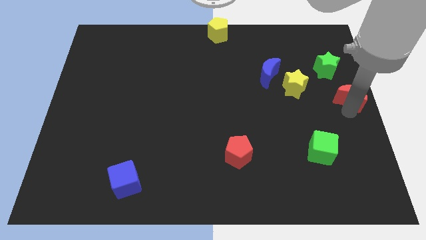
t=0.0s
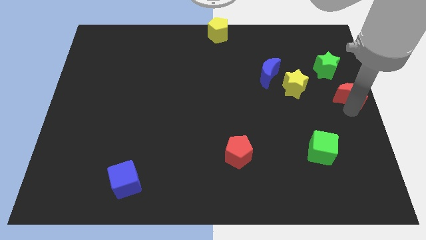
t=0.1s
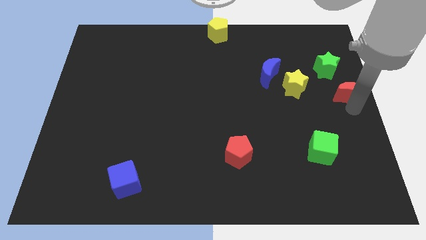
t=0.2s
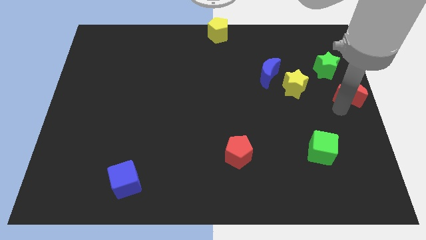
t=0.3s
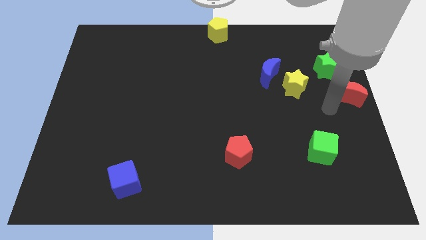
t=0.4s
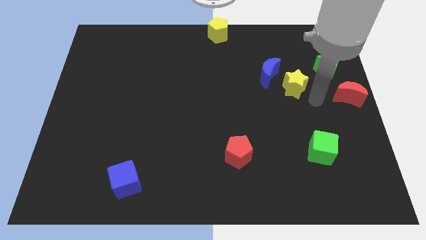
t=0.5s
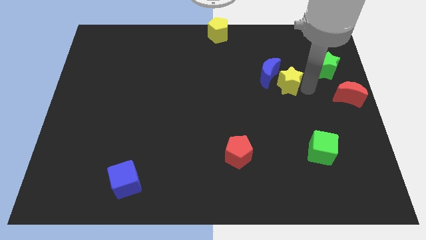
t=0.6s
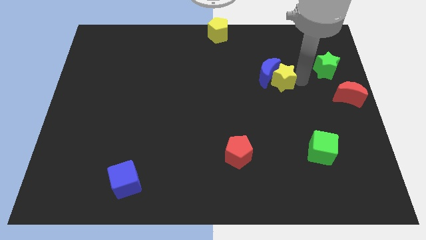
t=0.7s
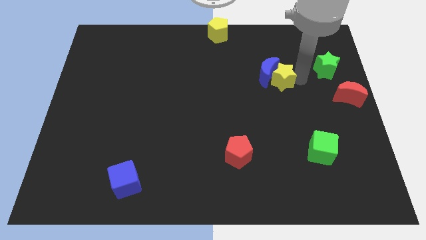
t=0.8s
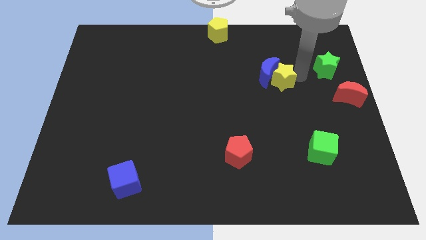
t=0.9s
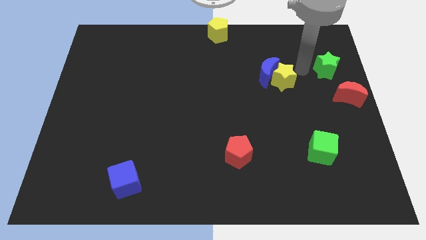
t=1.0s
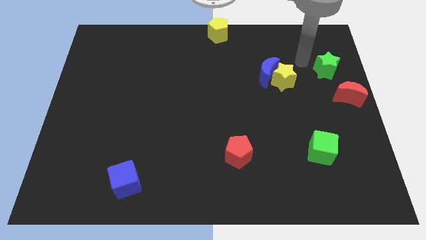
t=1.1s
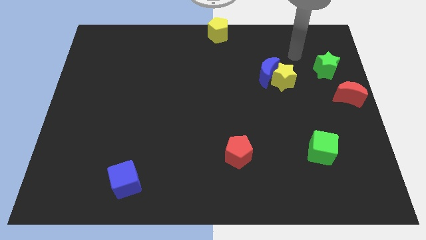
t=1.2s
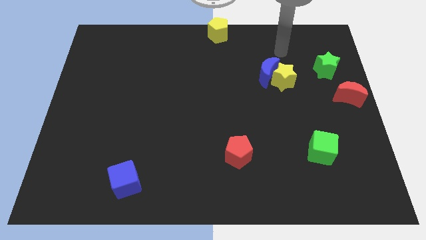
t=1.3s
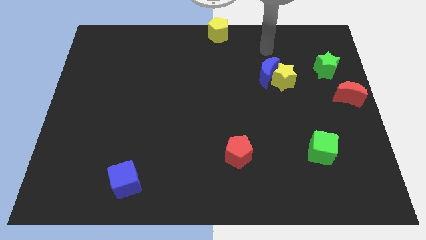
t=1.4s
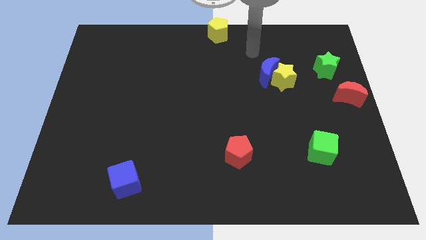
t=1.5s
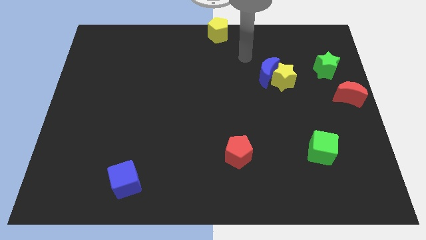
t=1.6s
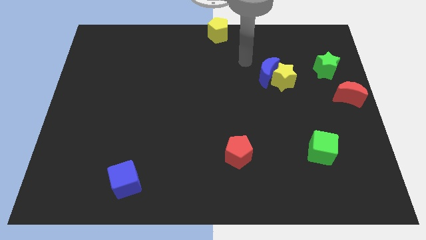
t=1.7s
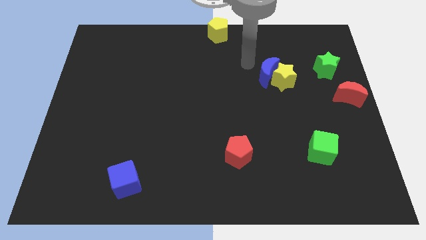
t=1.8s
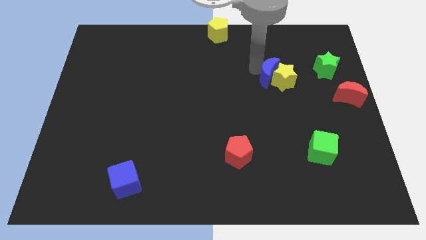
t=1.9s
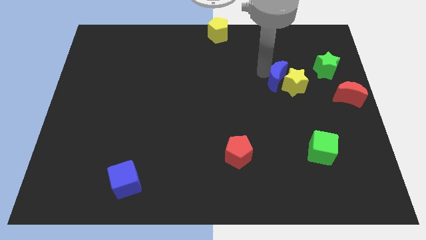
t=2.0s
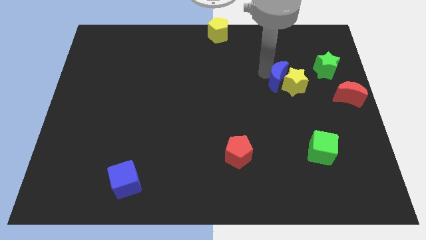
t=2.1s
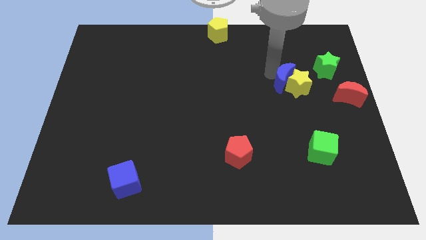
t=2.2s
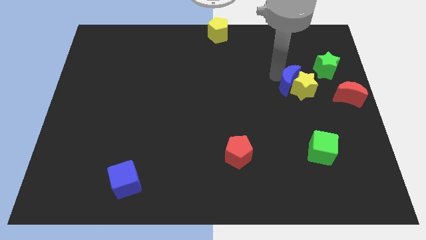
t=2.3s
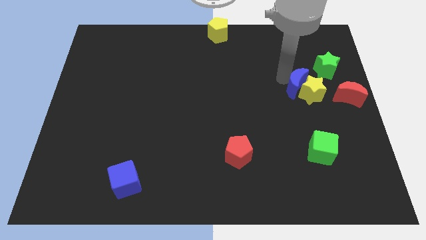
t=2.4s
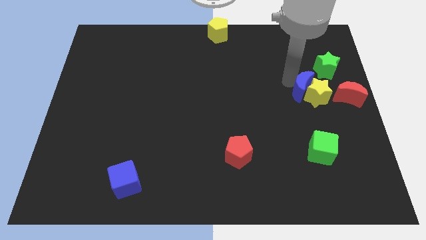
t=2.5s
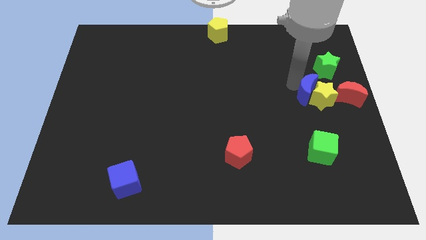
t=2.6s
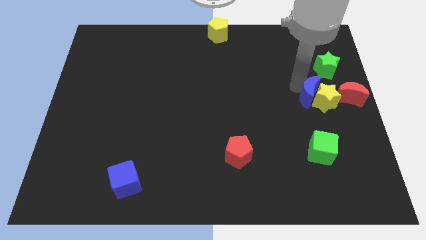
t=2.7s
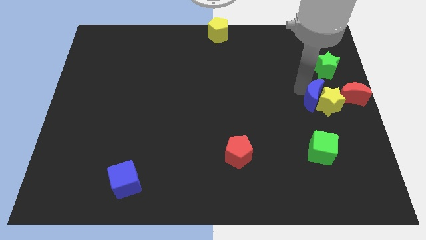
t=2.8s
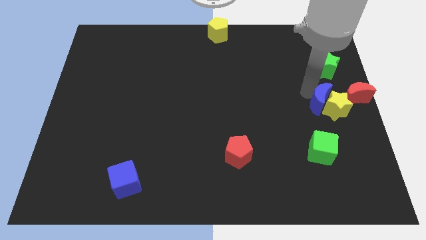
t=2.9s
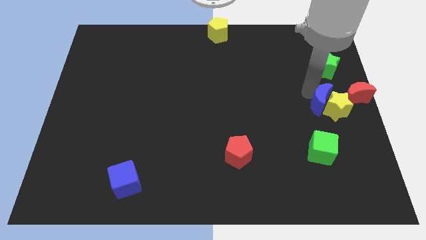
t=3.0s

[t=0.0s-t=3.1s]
push the yellow star and blue moon into the left side of the red moon

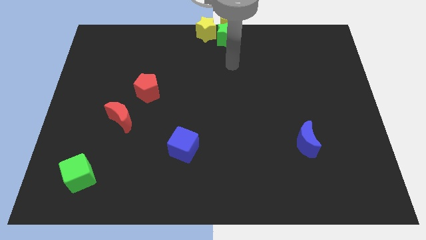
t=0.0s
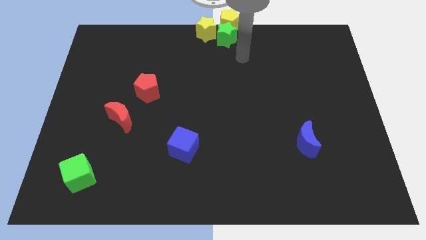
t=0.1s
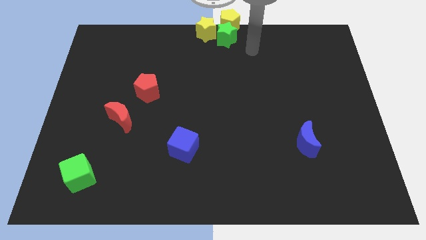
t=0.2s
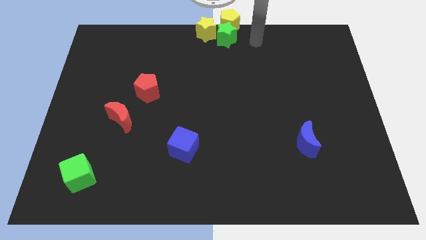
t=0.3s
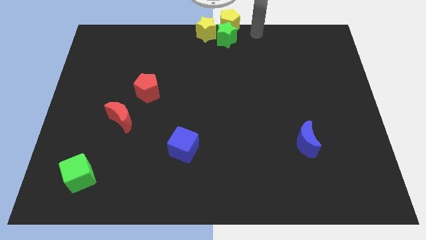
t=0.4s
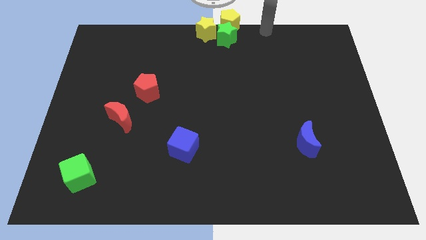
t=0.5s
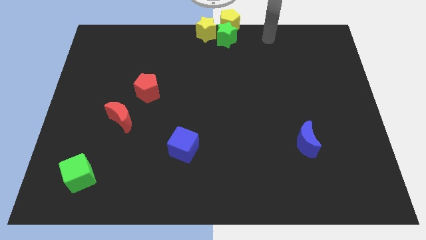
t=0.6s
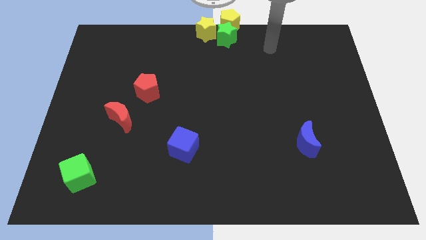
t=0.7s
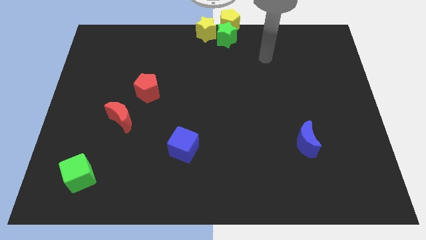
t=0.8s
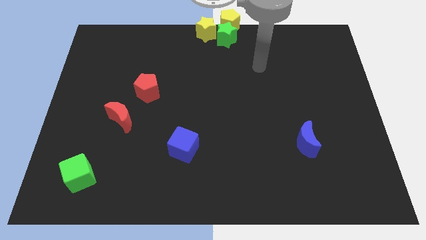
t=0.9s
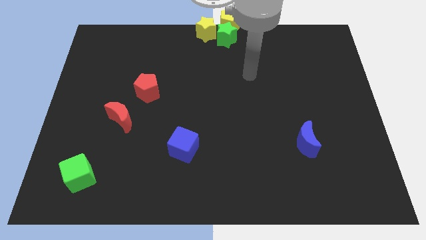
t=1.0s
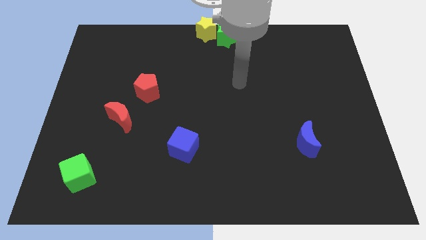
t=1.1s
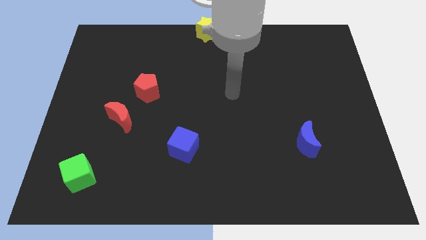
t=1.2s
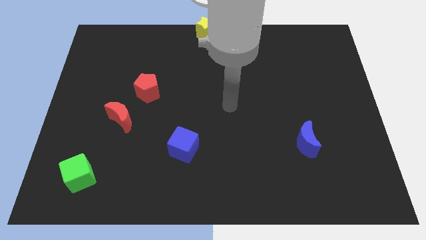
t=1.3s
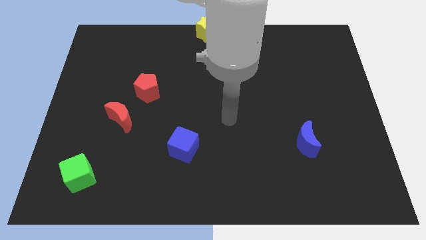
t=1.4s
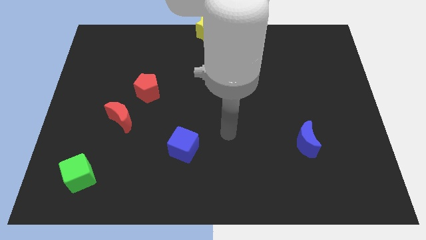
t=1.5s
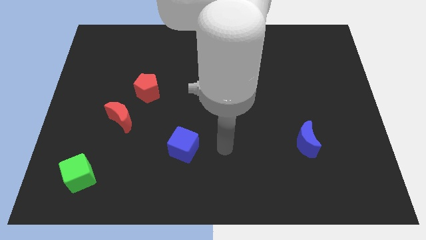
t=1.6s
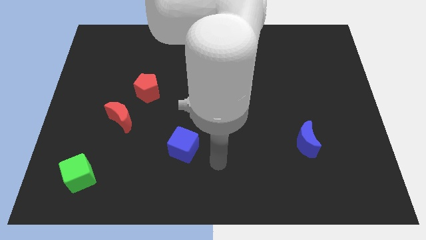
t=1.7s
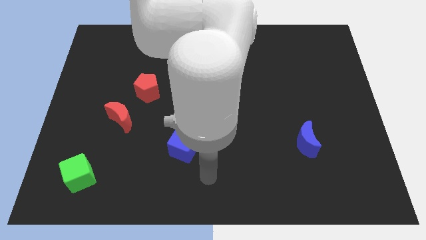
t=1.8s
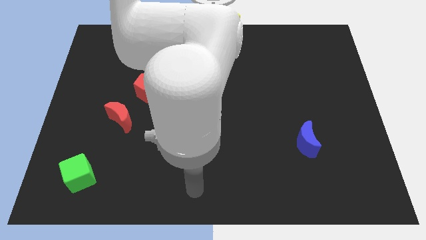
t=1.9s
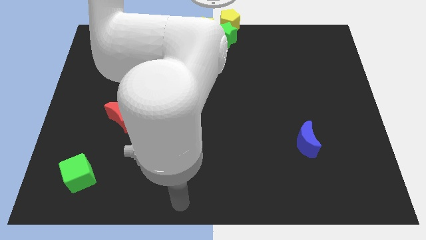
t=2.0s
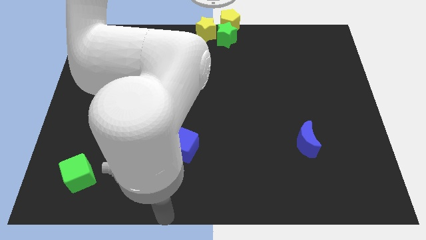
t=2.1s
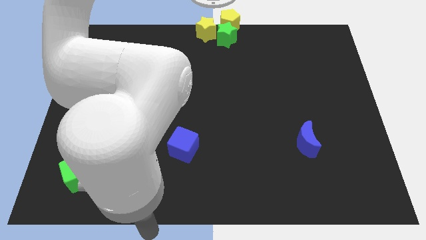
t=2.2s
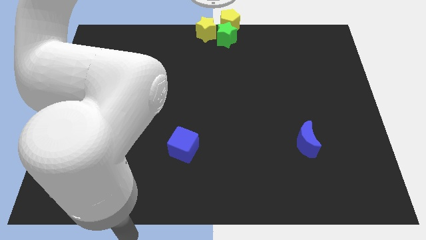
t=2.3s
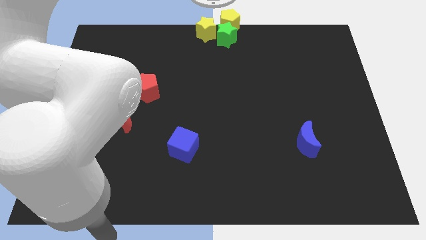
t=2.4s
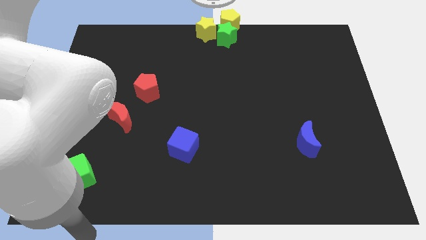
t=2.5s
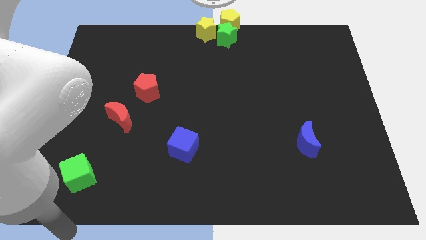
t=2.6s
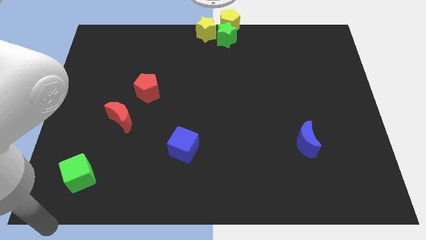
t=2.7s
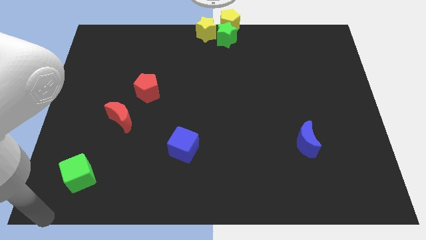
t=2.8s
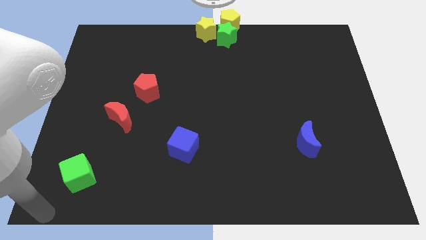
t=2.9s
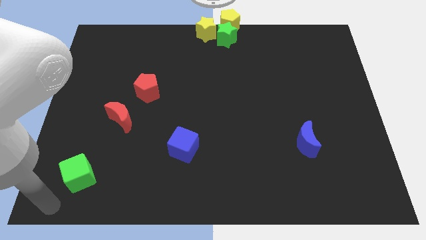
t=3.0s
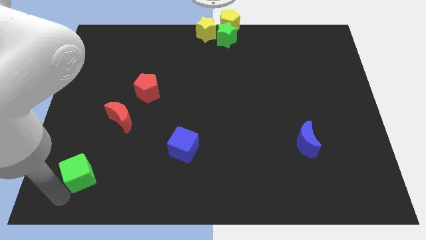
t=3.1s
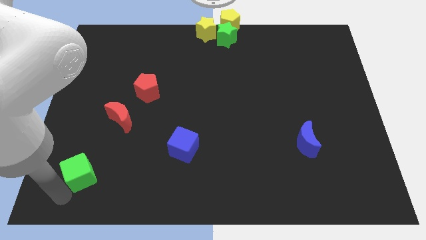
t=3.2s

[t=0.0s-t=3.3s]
push the arm to the bottom of green cube

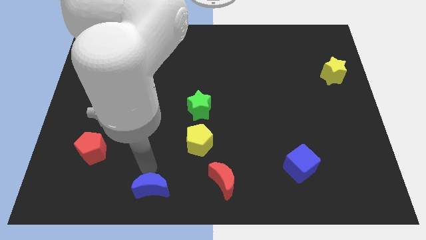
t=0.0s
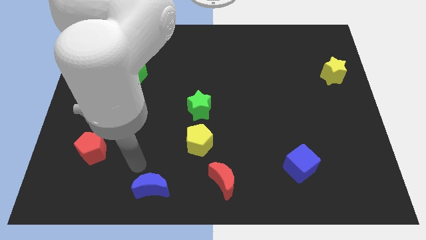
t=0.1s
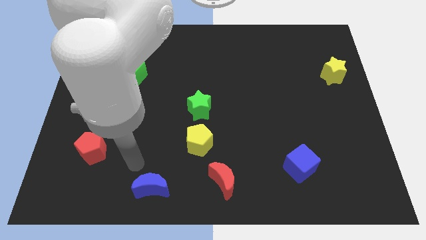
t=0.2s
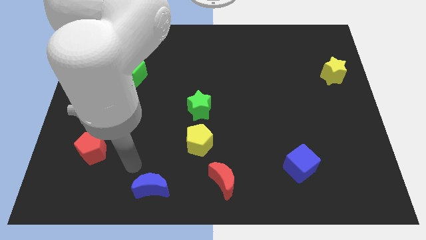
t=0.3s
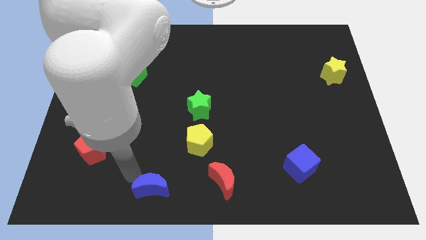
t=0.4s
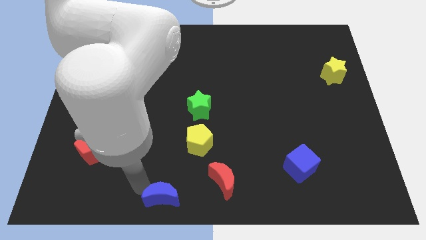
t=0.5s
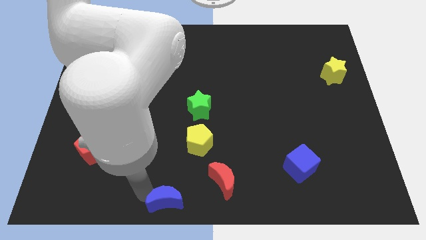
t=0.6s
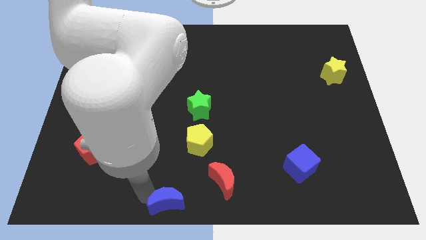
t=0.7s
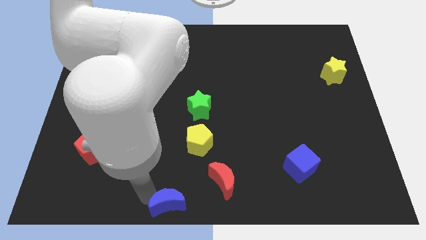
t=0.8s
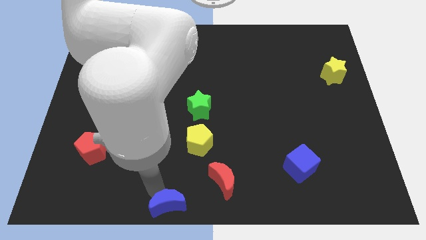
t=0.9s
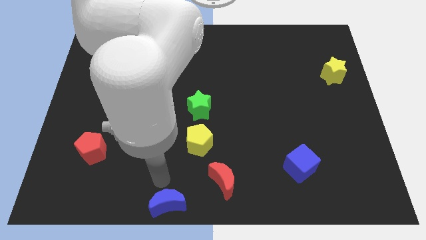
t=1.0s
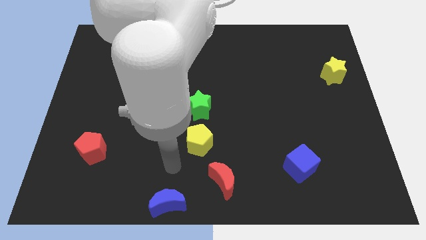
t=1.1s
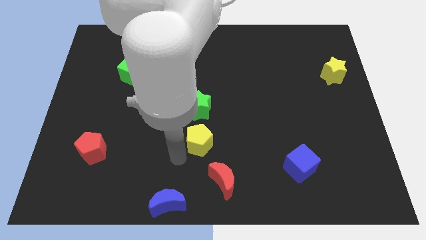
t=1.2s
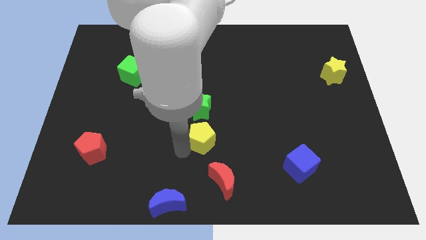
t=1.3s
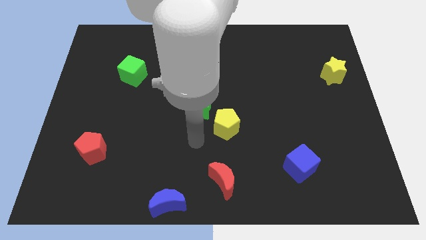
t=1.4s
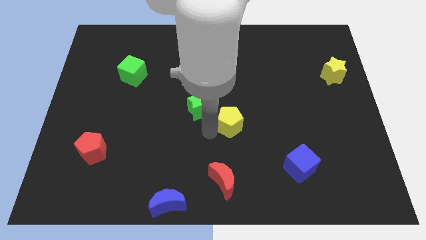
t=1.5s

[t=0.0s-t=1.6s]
push the blue moon downward

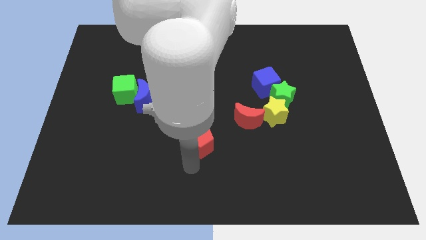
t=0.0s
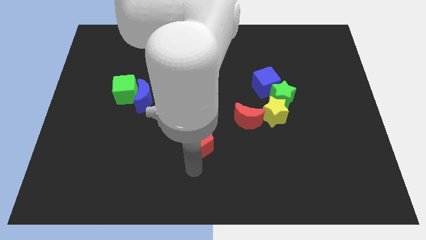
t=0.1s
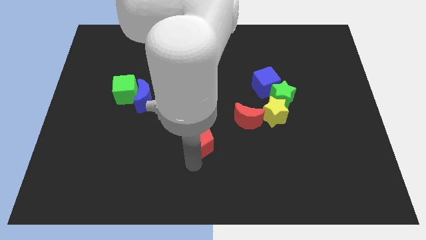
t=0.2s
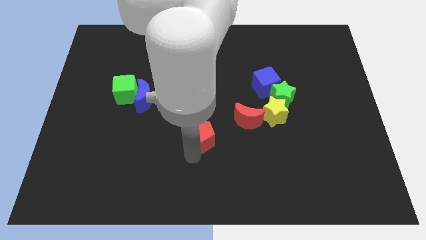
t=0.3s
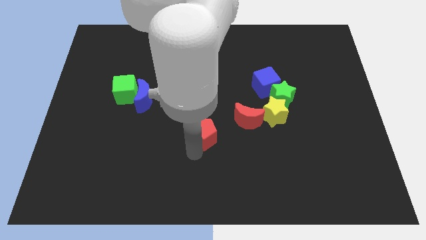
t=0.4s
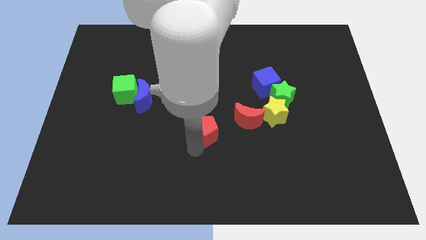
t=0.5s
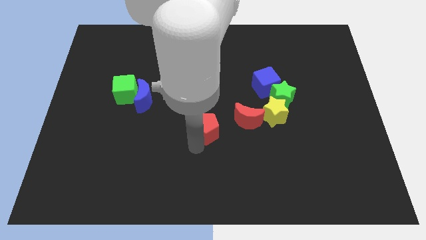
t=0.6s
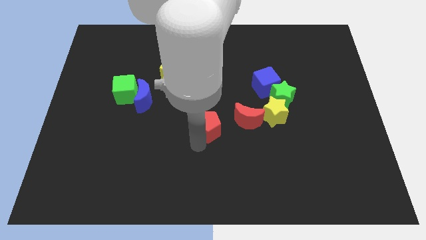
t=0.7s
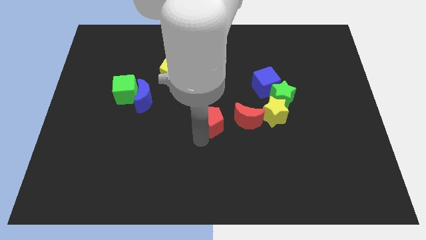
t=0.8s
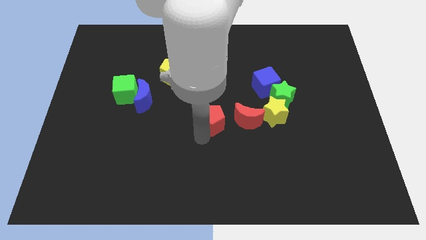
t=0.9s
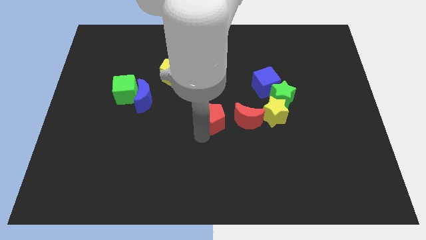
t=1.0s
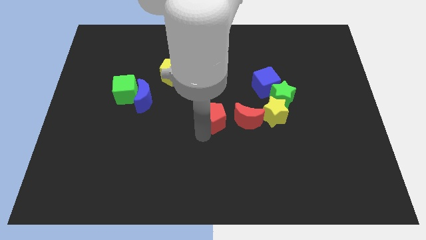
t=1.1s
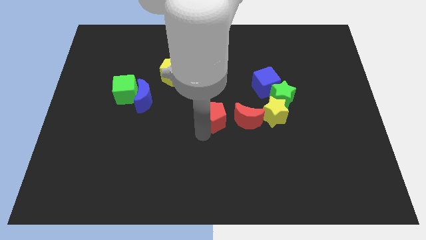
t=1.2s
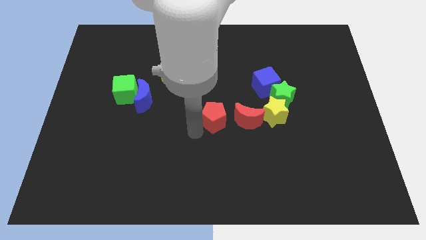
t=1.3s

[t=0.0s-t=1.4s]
place the red pentagon left to the red moon
